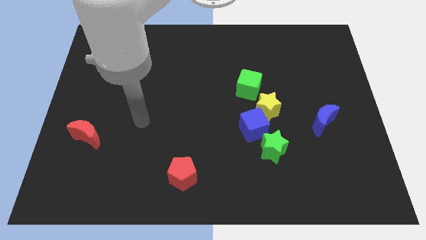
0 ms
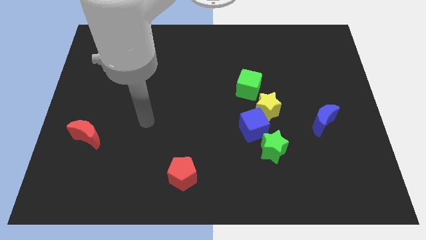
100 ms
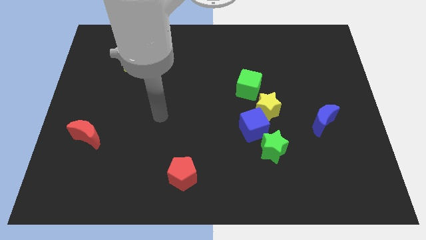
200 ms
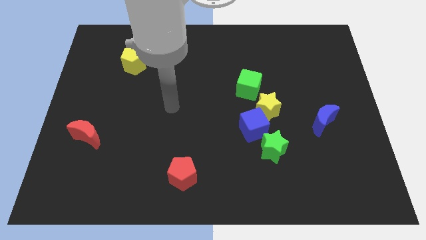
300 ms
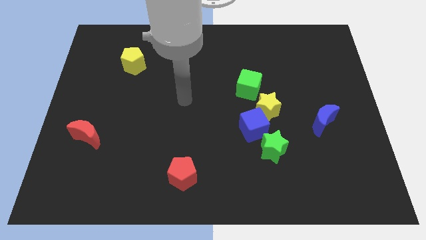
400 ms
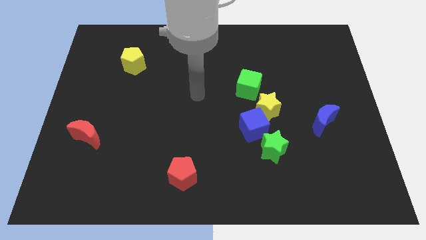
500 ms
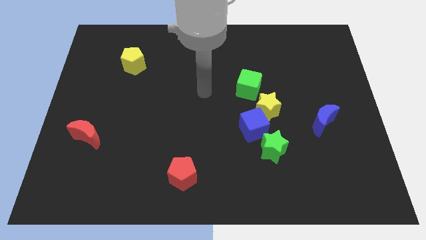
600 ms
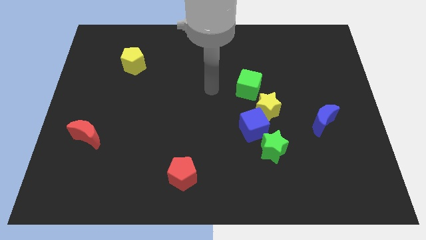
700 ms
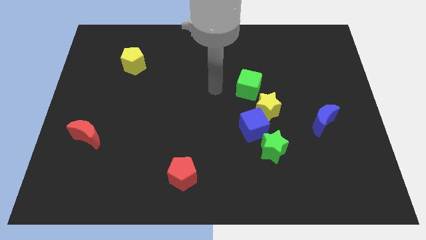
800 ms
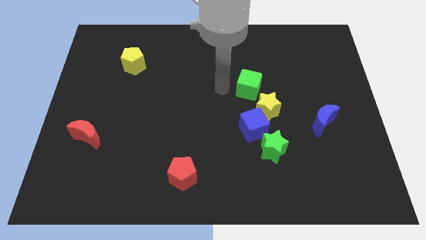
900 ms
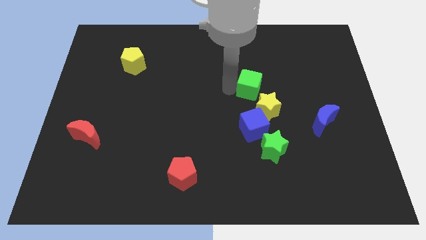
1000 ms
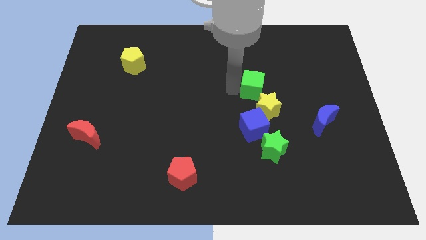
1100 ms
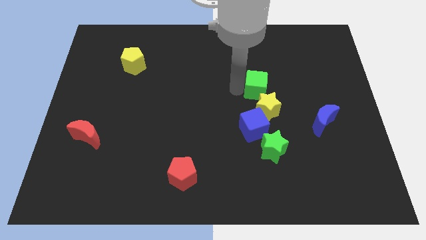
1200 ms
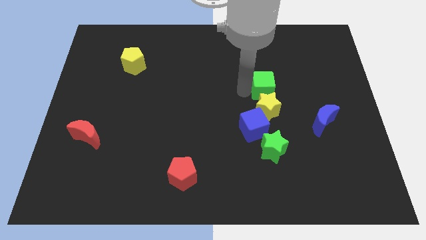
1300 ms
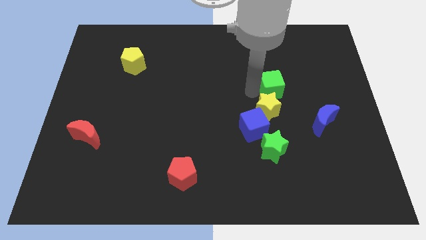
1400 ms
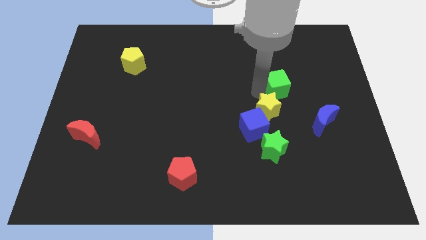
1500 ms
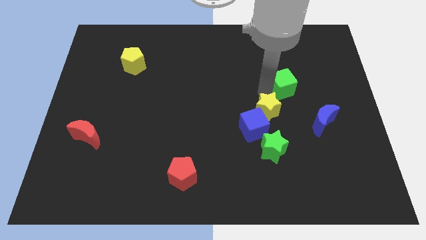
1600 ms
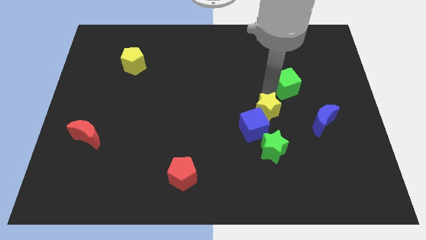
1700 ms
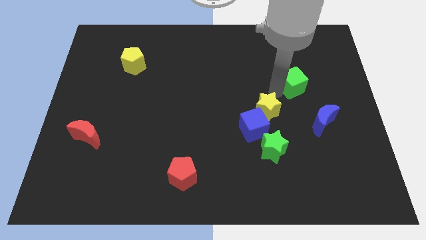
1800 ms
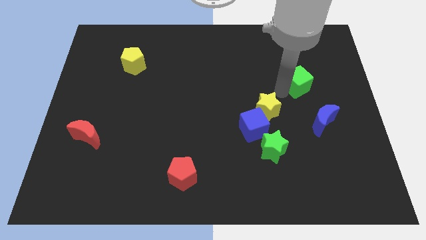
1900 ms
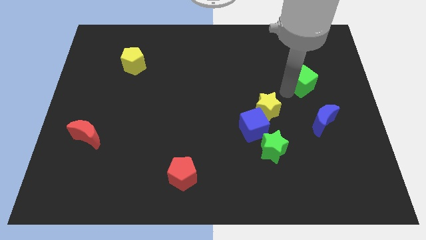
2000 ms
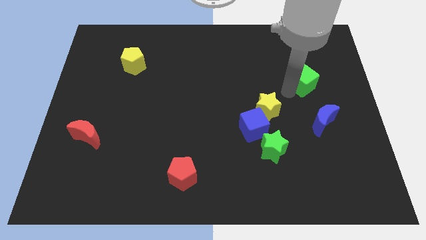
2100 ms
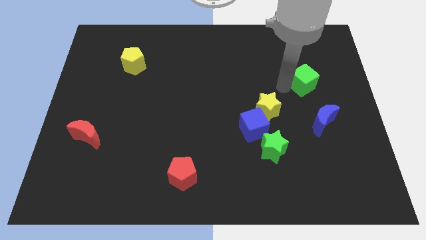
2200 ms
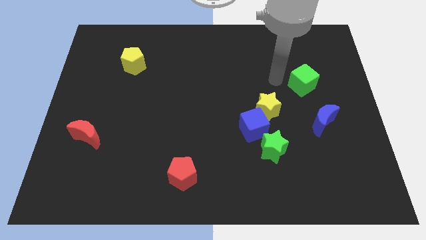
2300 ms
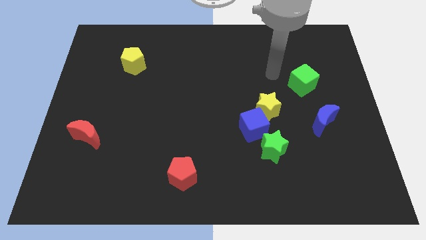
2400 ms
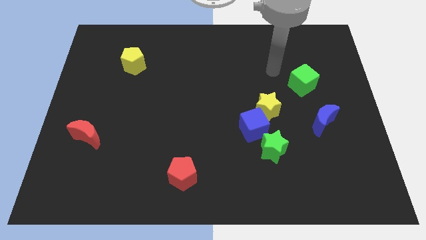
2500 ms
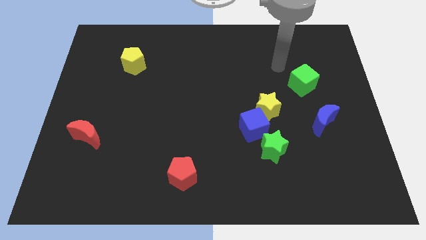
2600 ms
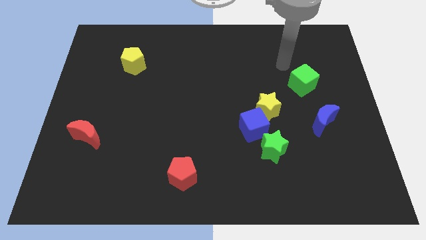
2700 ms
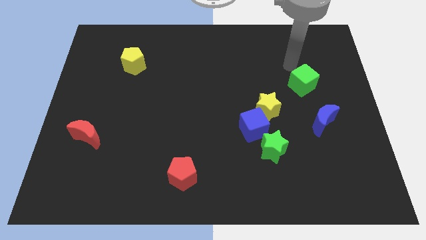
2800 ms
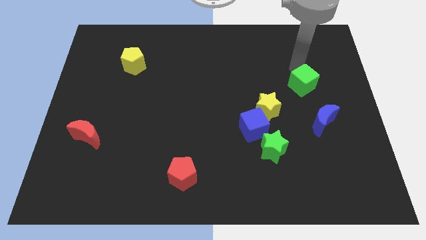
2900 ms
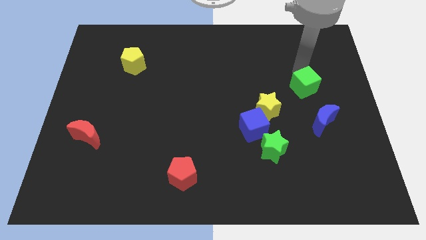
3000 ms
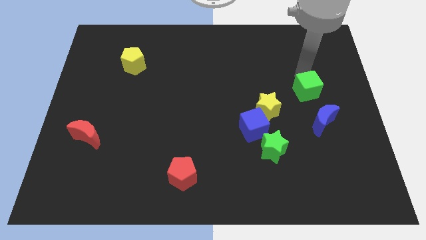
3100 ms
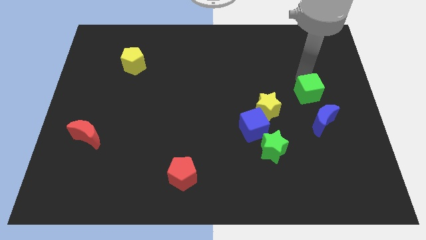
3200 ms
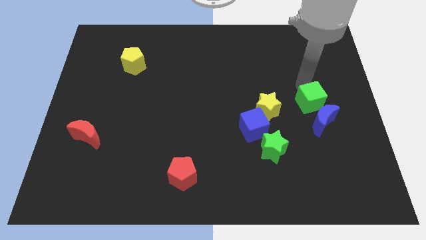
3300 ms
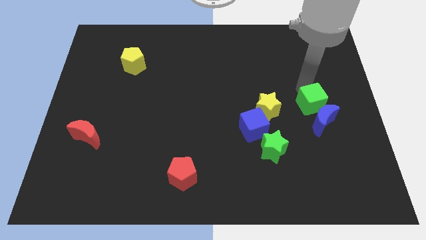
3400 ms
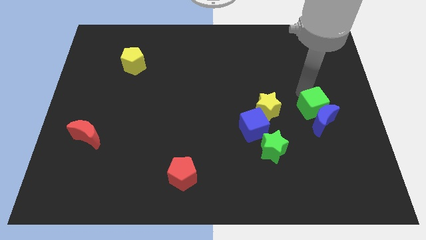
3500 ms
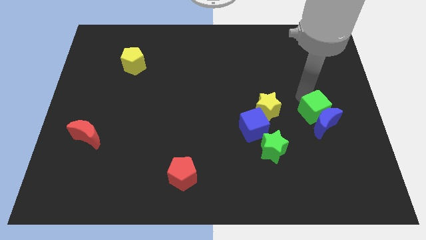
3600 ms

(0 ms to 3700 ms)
slide the green cube towards the blue moon

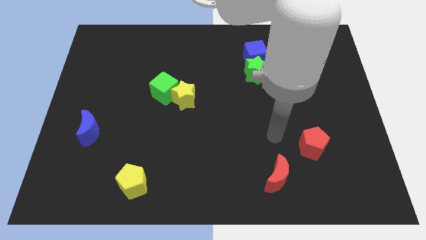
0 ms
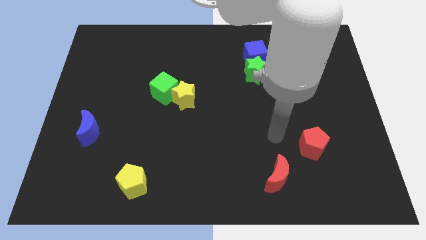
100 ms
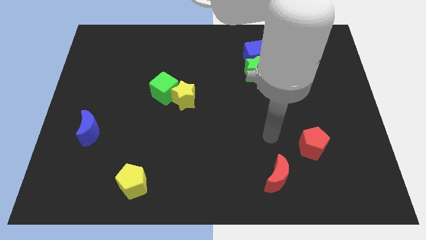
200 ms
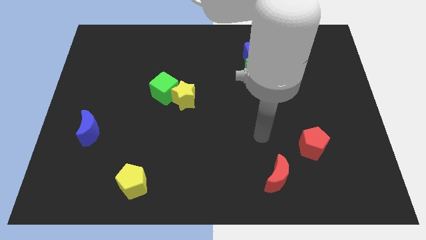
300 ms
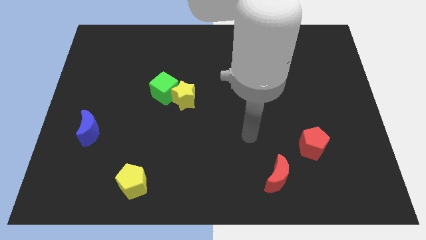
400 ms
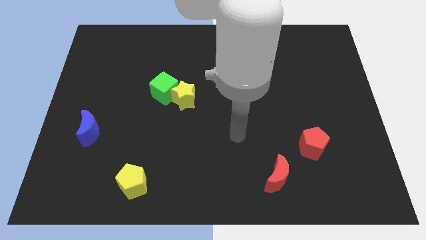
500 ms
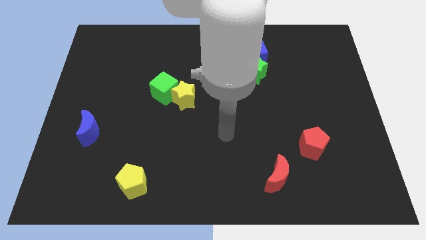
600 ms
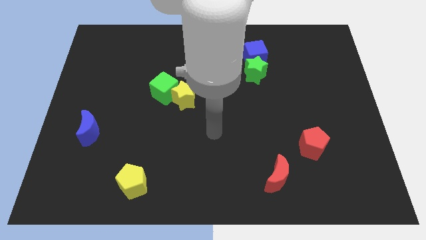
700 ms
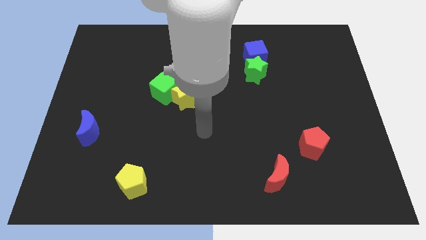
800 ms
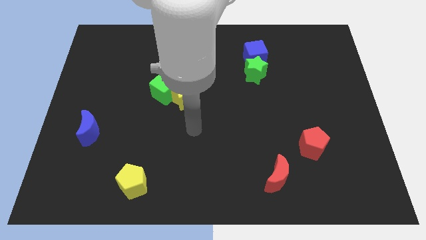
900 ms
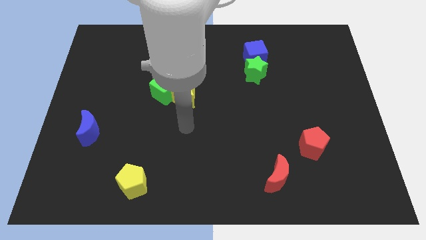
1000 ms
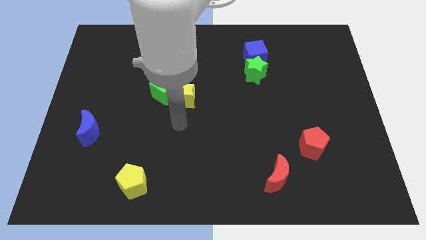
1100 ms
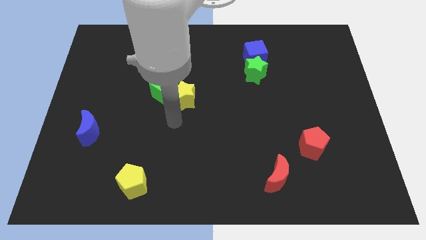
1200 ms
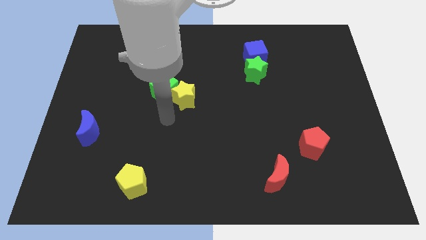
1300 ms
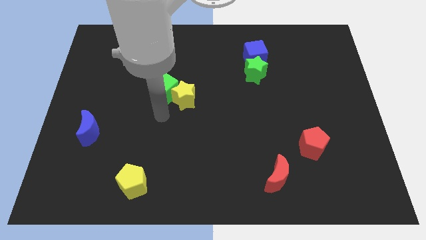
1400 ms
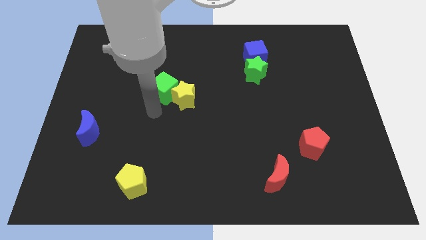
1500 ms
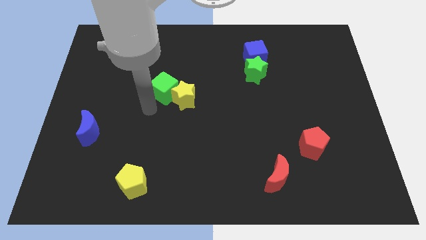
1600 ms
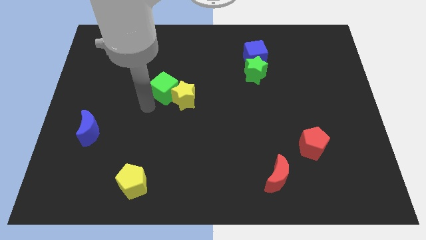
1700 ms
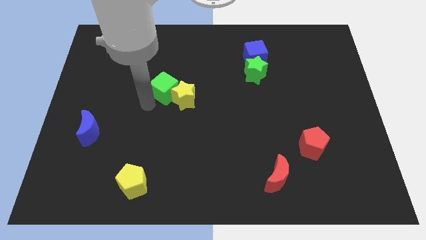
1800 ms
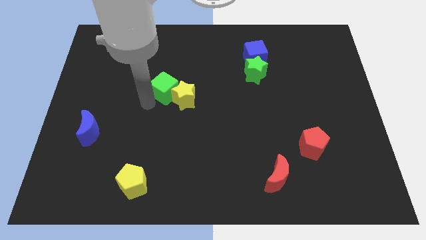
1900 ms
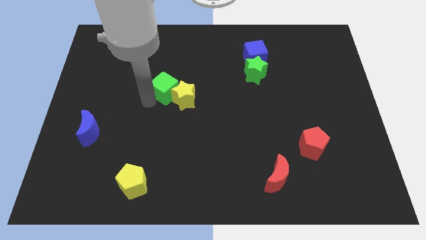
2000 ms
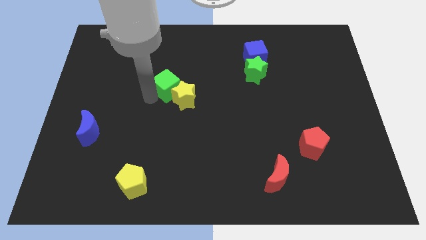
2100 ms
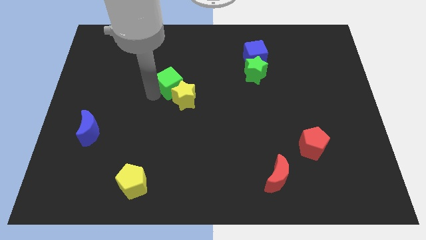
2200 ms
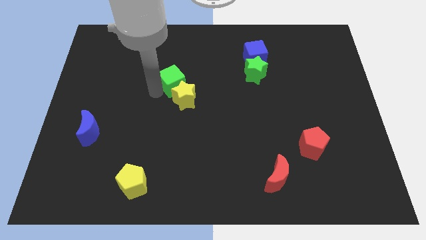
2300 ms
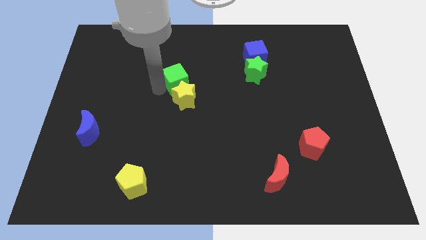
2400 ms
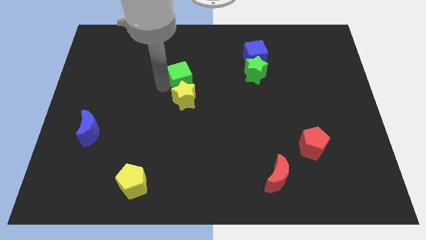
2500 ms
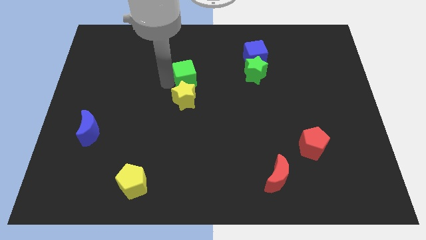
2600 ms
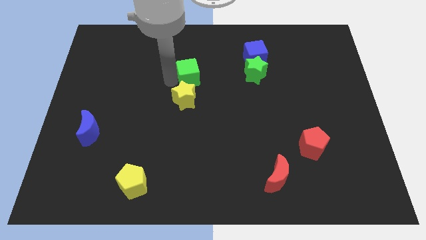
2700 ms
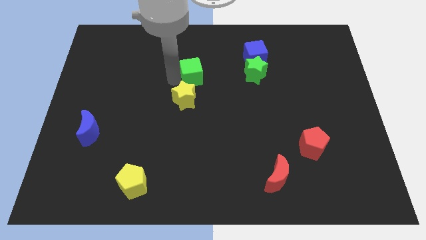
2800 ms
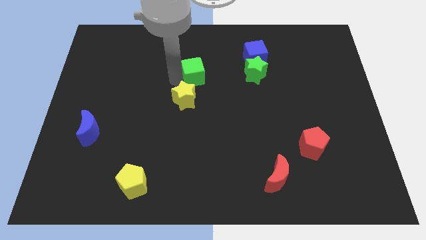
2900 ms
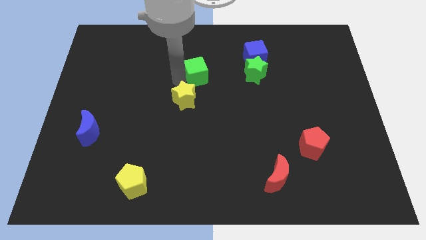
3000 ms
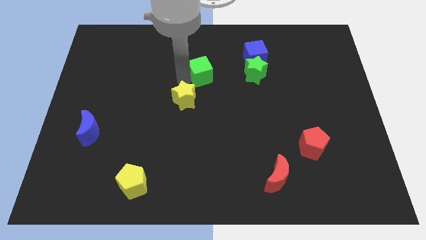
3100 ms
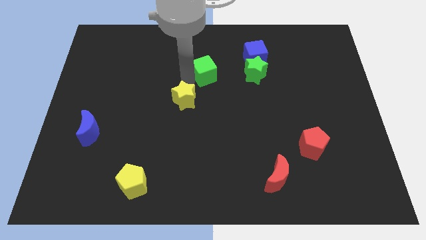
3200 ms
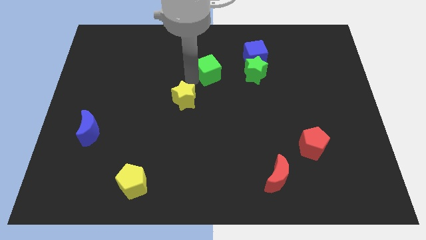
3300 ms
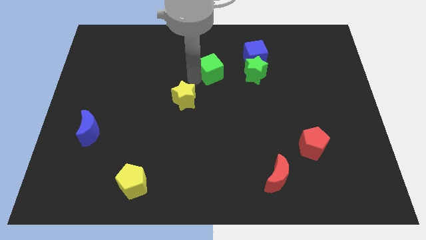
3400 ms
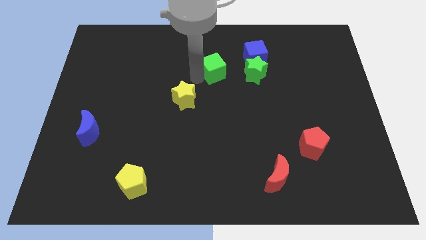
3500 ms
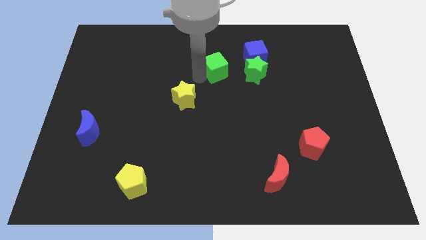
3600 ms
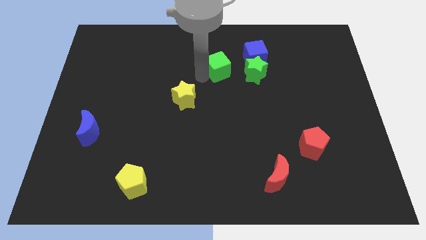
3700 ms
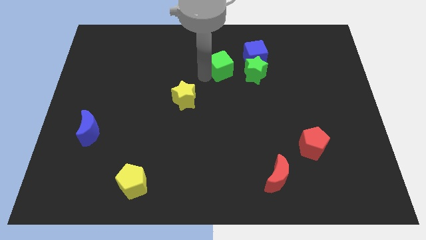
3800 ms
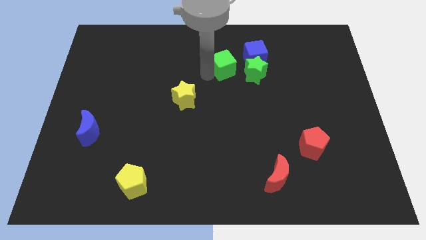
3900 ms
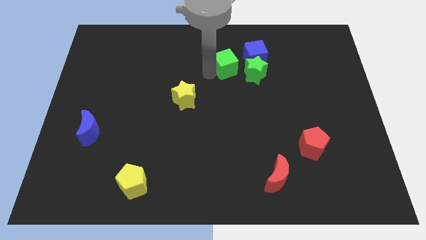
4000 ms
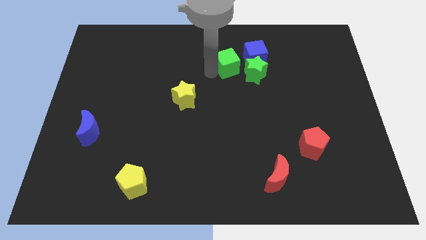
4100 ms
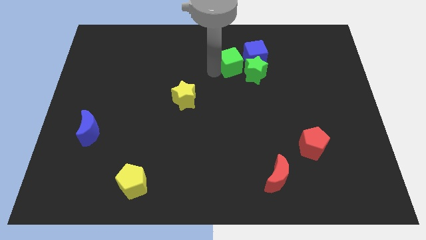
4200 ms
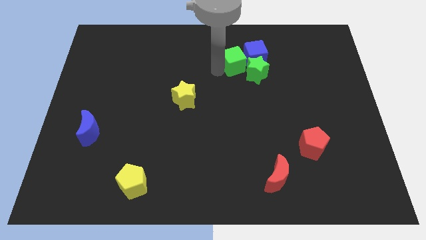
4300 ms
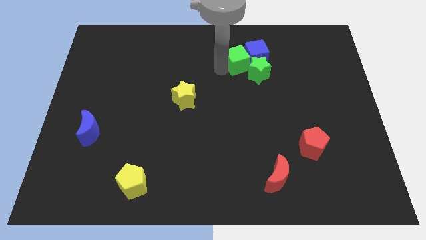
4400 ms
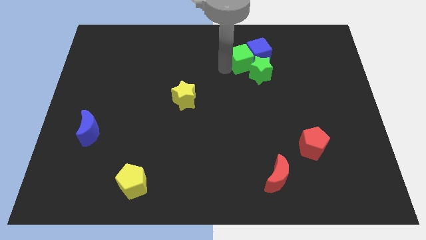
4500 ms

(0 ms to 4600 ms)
put the green cube towards the blue cube
